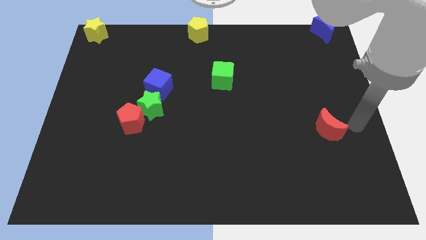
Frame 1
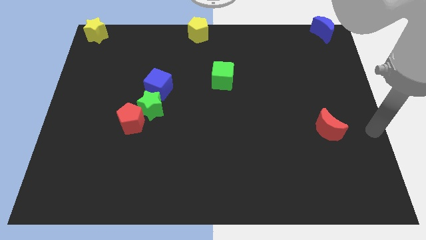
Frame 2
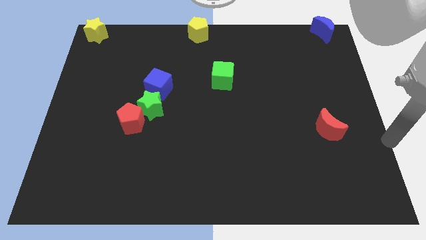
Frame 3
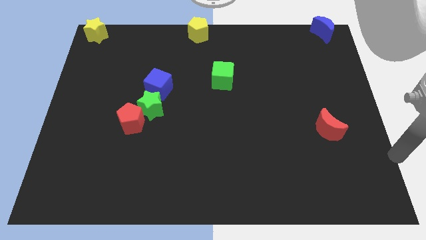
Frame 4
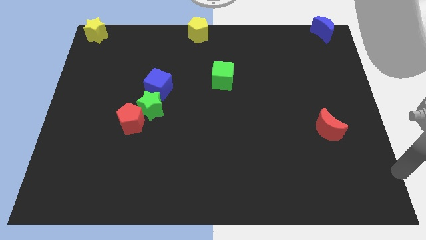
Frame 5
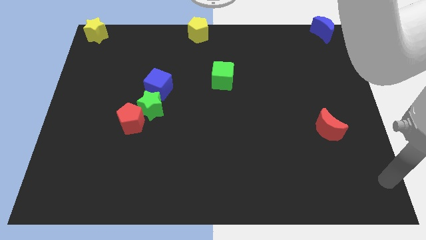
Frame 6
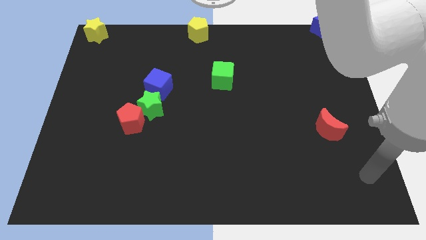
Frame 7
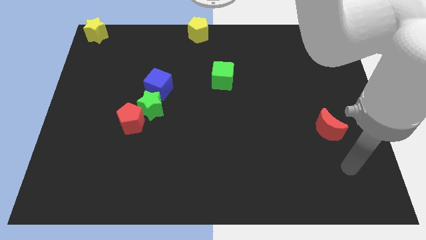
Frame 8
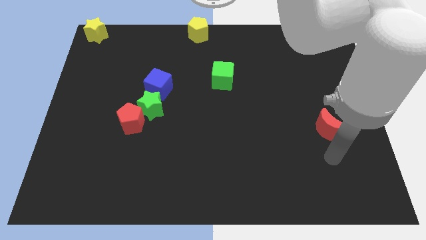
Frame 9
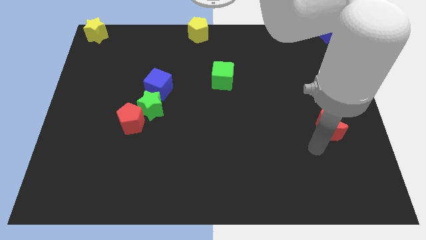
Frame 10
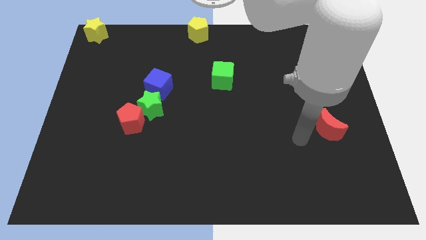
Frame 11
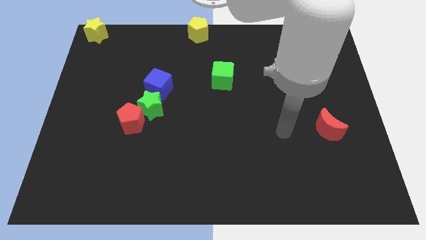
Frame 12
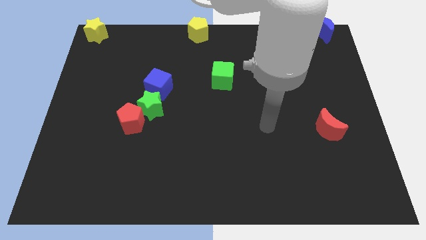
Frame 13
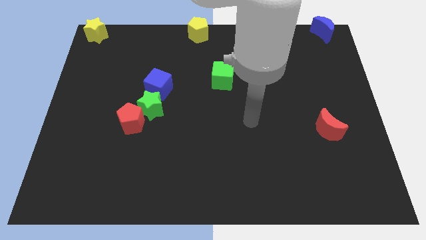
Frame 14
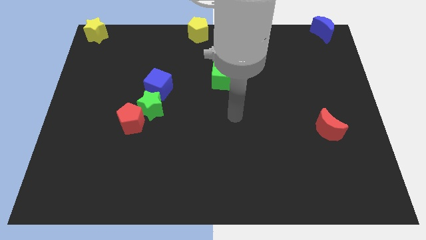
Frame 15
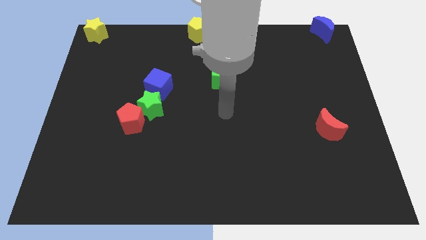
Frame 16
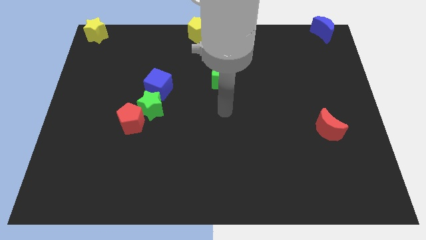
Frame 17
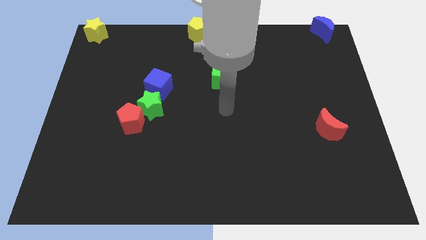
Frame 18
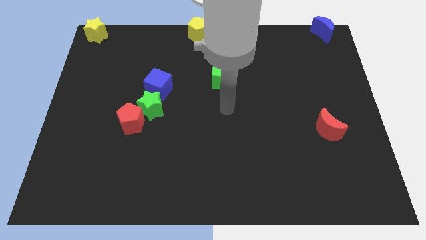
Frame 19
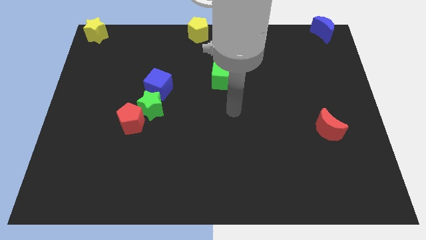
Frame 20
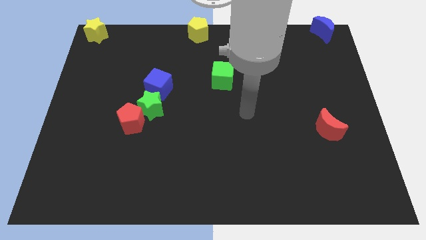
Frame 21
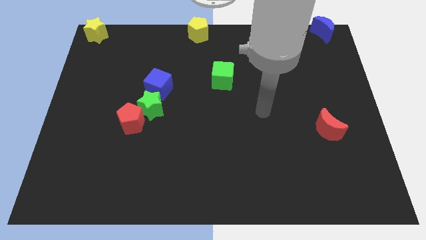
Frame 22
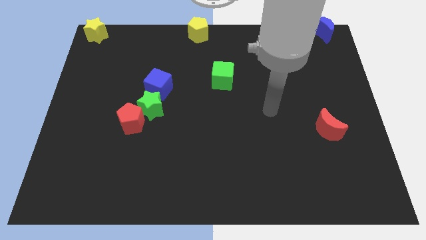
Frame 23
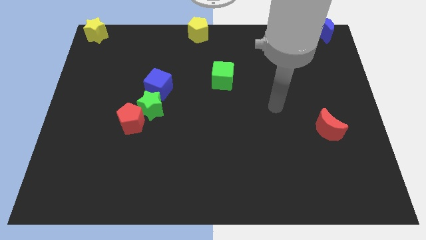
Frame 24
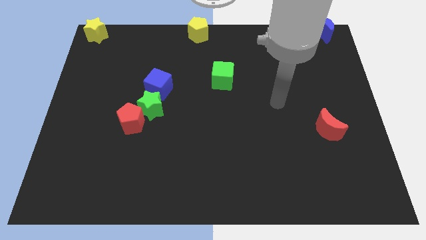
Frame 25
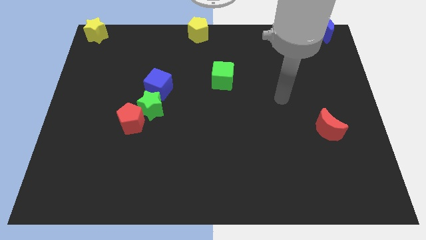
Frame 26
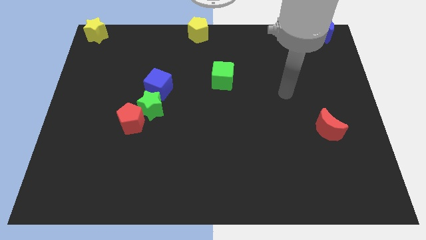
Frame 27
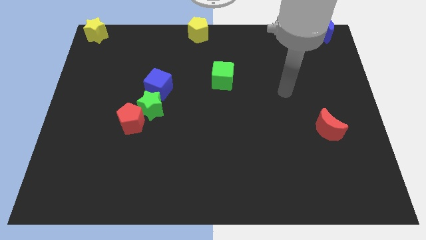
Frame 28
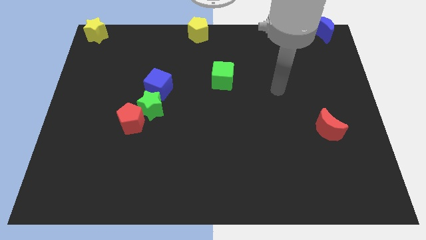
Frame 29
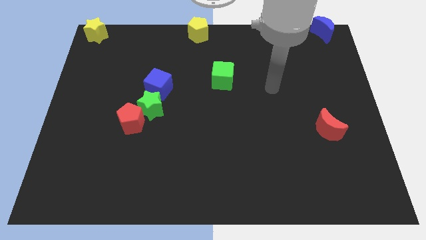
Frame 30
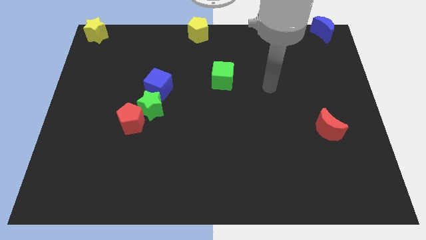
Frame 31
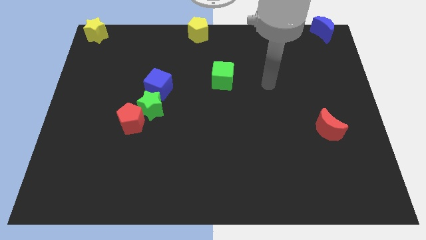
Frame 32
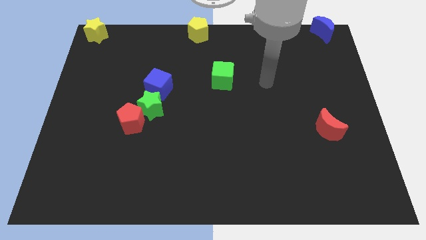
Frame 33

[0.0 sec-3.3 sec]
point your arm to the right side of green cube

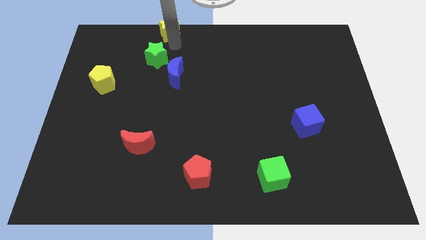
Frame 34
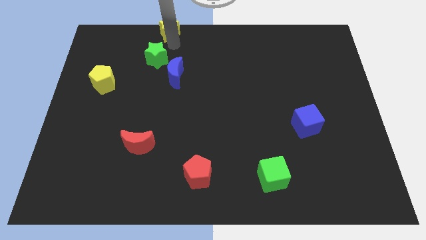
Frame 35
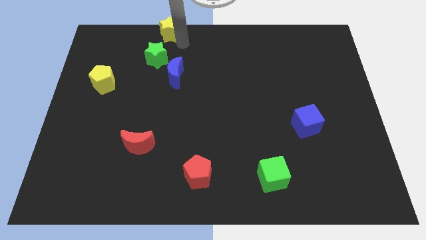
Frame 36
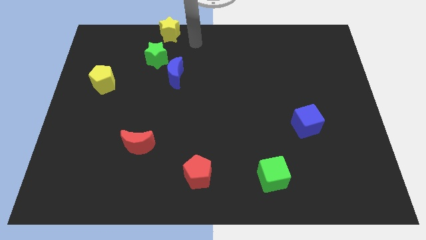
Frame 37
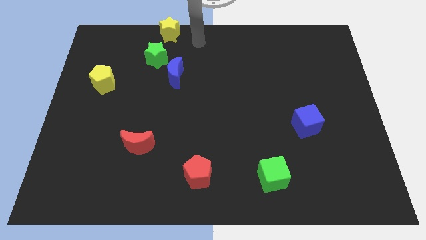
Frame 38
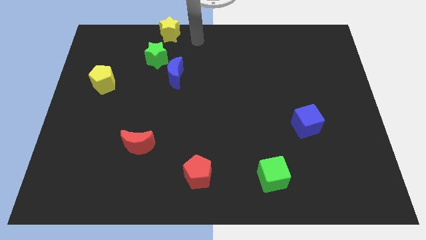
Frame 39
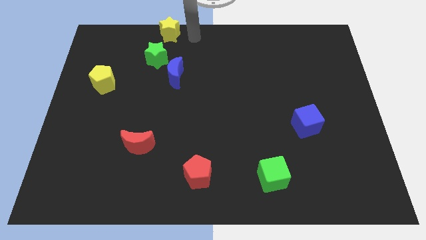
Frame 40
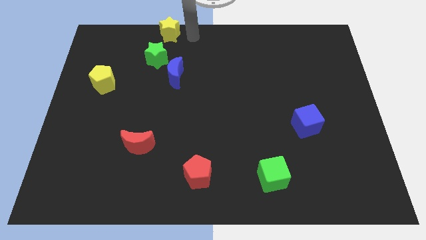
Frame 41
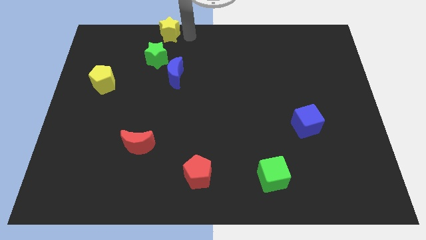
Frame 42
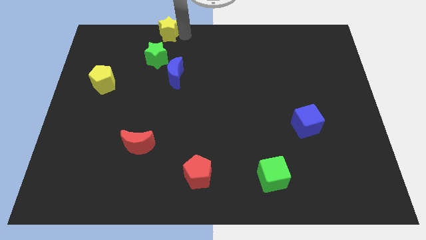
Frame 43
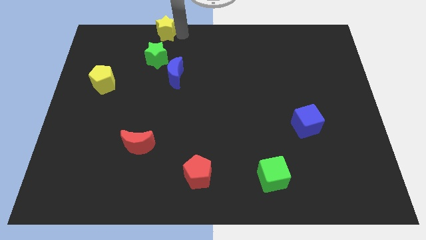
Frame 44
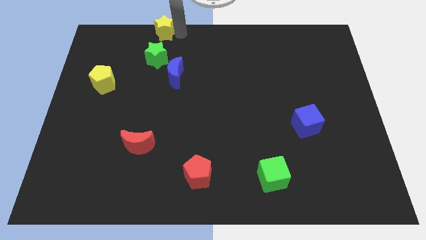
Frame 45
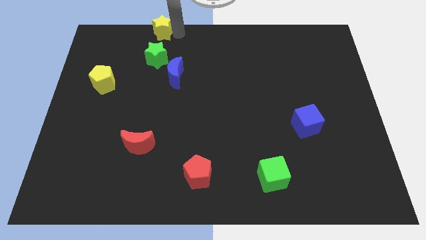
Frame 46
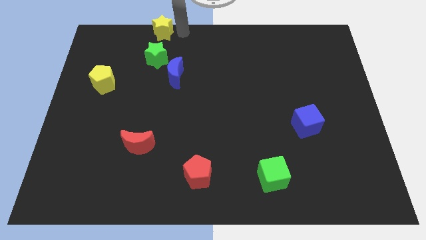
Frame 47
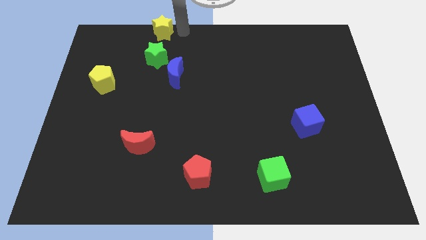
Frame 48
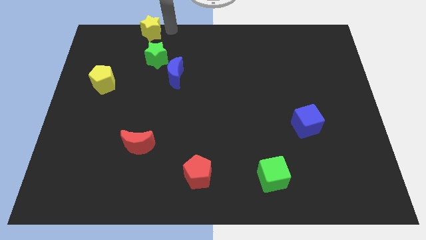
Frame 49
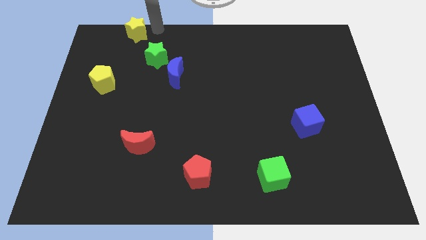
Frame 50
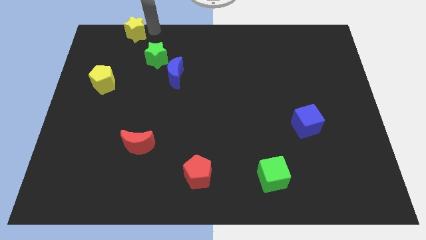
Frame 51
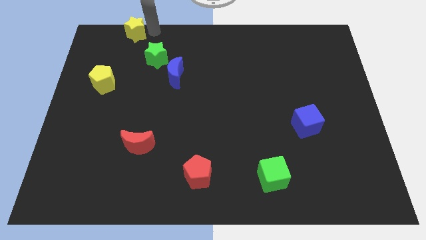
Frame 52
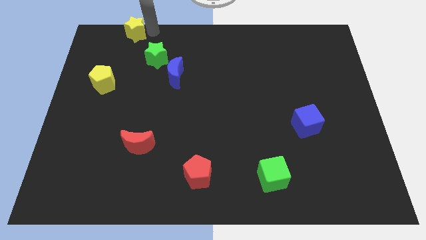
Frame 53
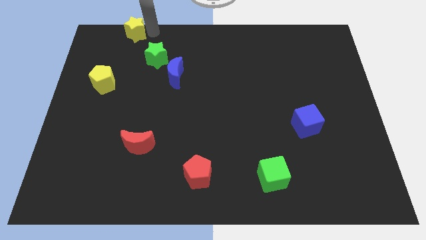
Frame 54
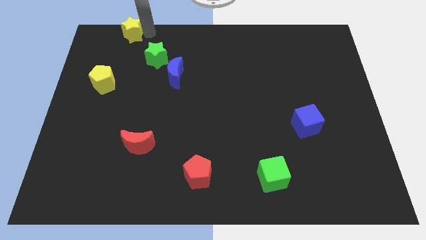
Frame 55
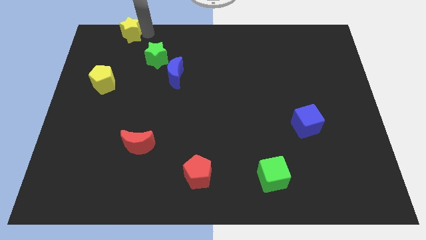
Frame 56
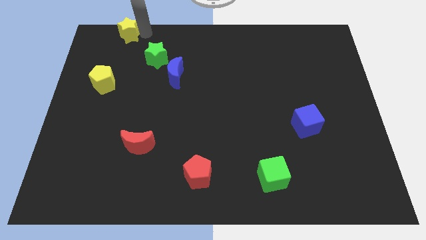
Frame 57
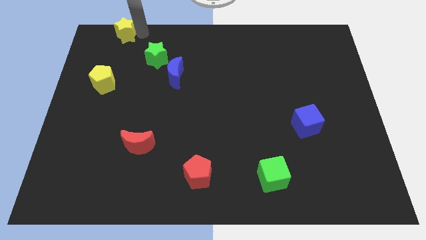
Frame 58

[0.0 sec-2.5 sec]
drag the yellow star to the left

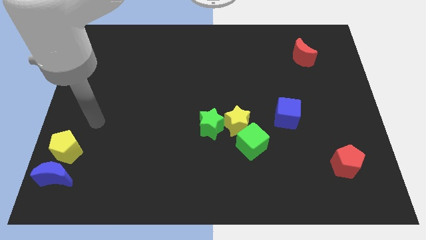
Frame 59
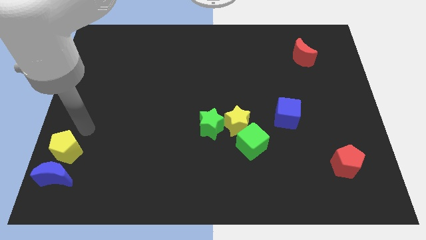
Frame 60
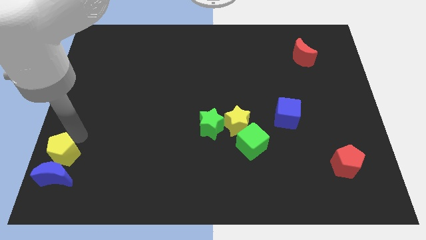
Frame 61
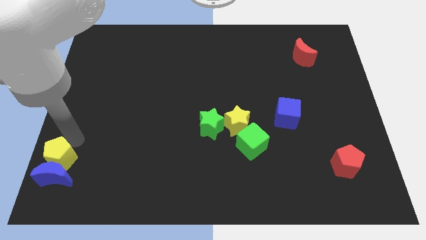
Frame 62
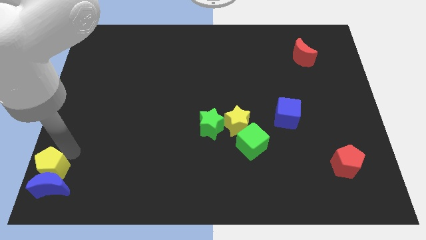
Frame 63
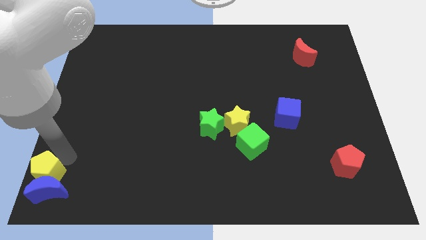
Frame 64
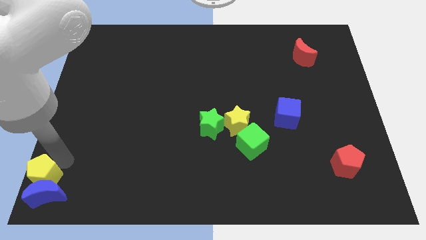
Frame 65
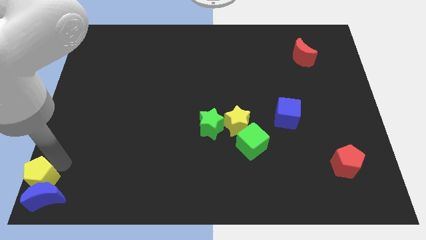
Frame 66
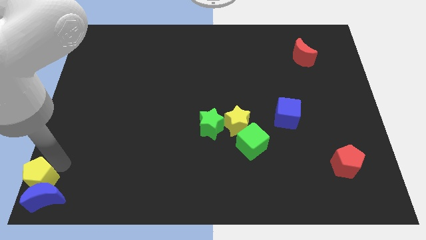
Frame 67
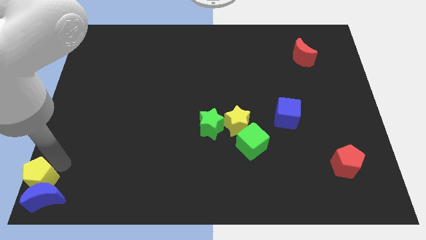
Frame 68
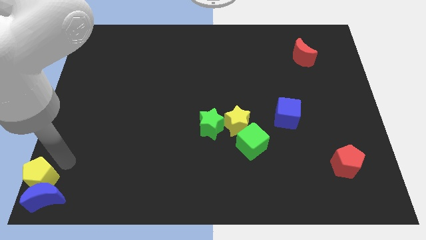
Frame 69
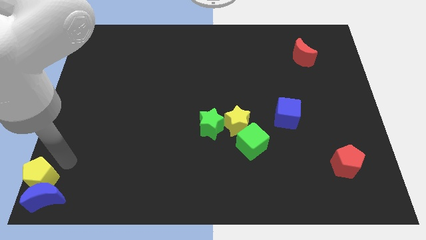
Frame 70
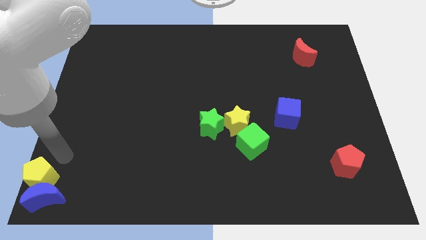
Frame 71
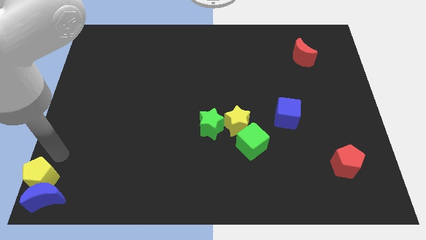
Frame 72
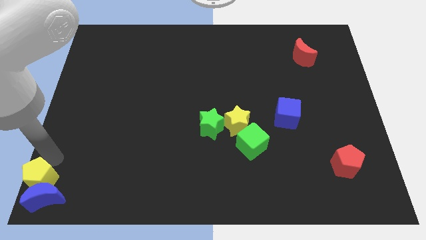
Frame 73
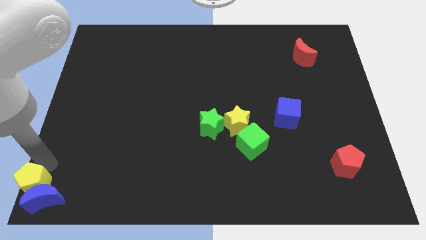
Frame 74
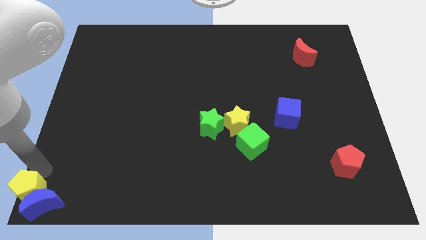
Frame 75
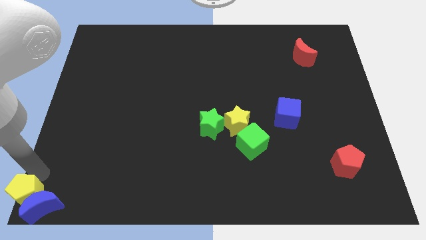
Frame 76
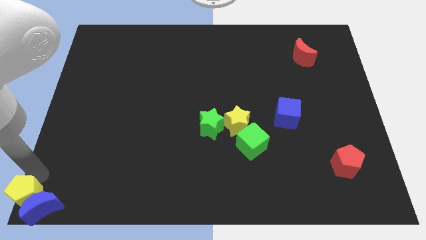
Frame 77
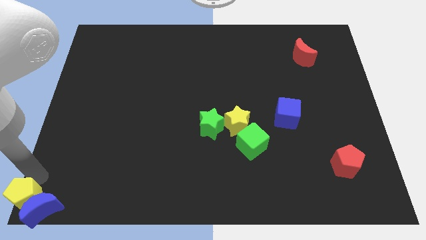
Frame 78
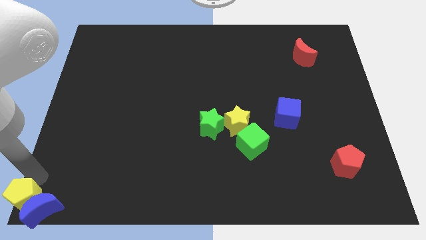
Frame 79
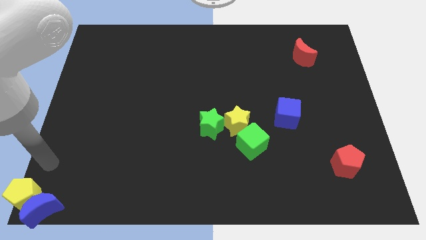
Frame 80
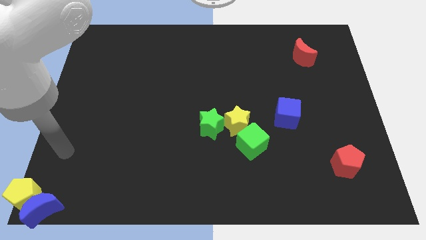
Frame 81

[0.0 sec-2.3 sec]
push the blue moon to the bottom left corner with the yellow pentagon

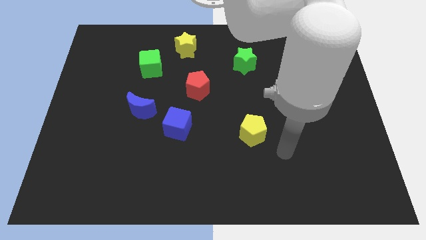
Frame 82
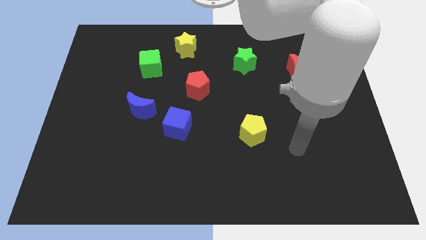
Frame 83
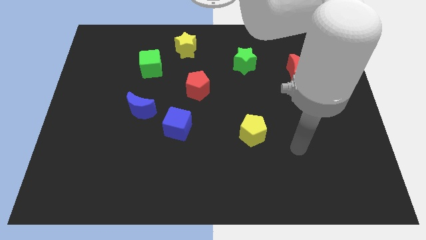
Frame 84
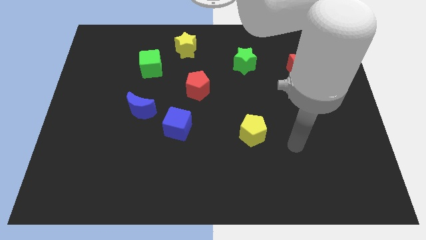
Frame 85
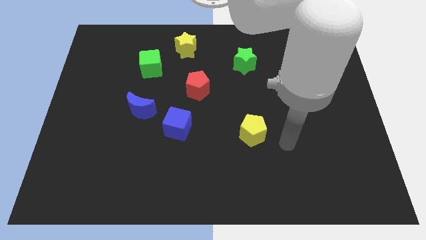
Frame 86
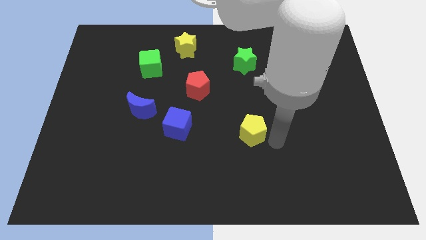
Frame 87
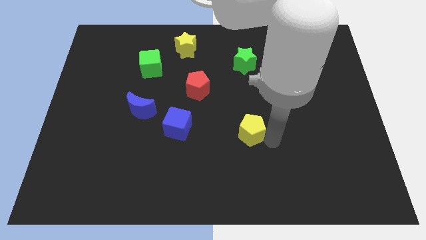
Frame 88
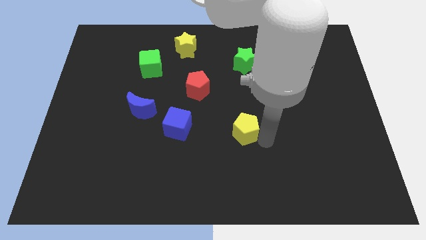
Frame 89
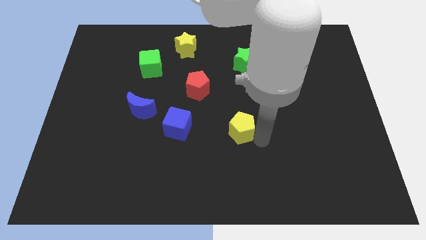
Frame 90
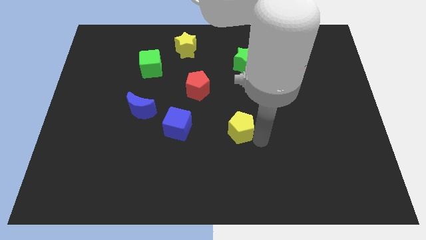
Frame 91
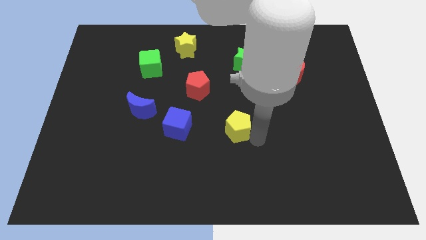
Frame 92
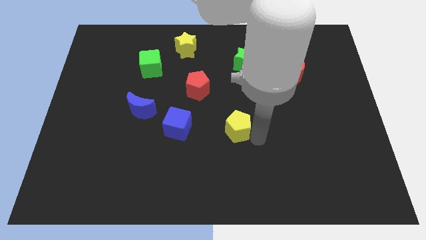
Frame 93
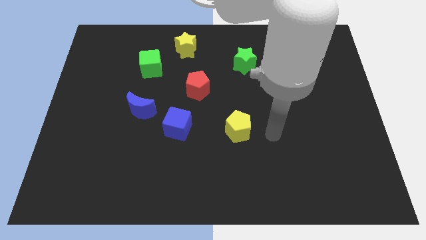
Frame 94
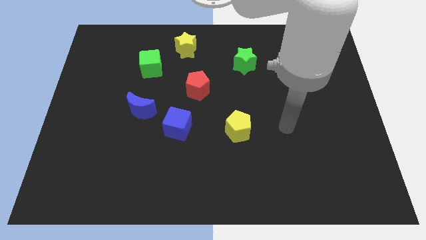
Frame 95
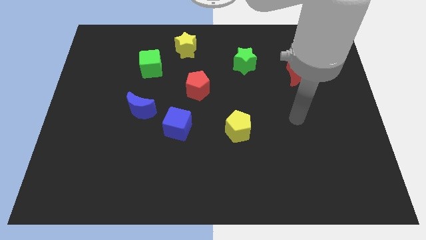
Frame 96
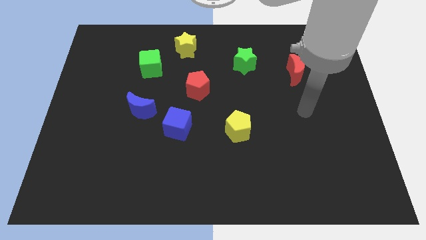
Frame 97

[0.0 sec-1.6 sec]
place yellow pentagon right of the blue block
